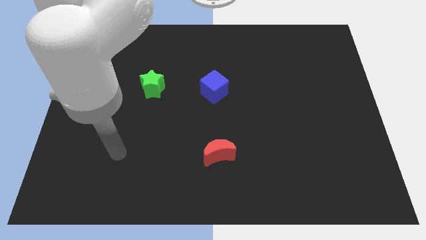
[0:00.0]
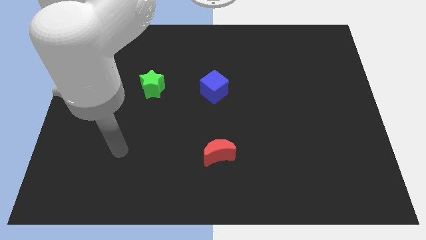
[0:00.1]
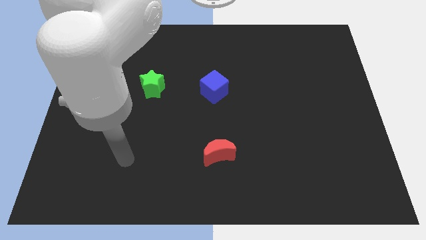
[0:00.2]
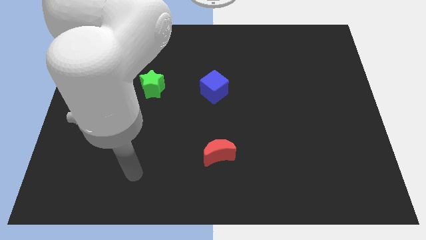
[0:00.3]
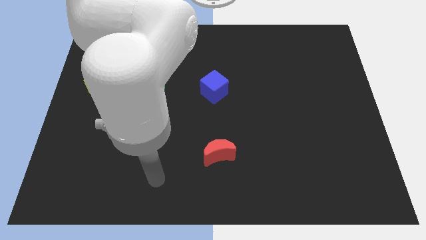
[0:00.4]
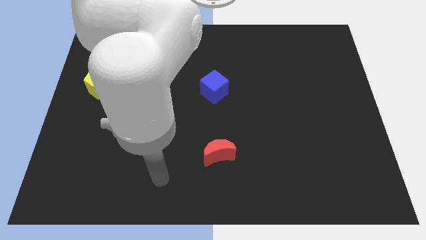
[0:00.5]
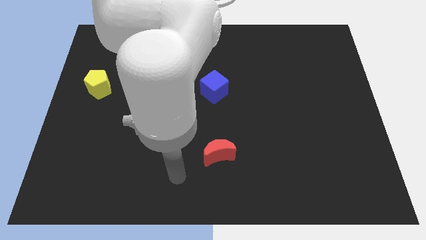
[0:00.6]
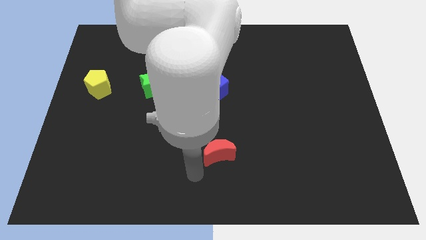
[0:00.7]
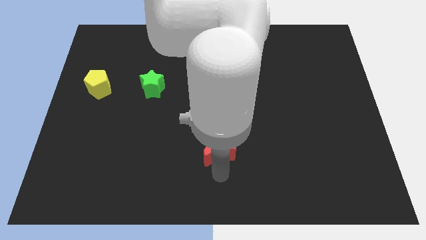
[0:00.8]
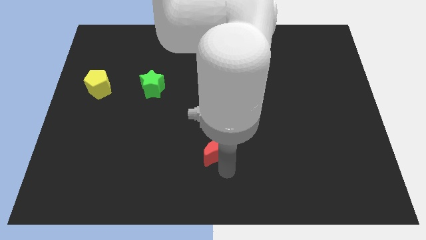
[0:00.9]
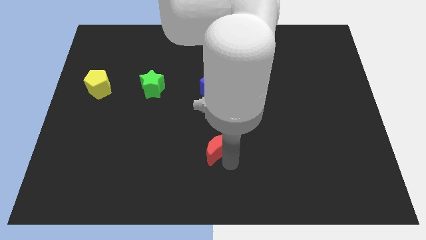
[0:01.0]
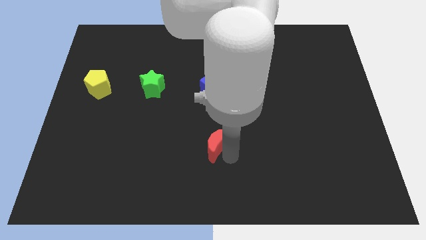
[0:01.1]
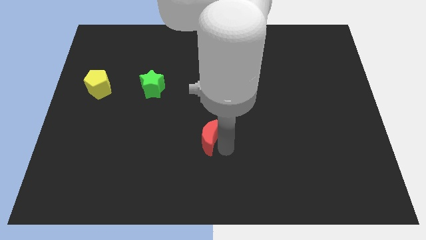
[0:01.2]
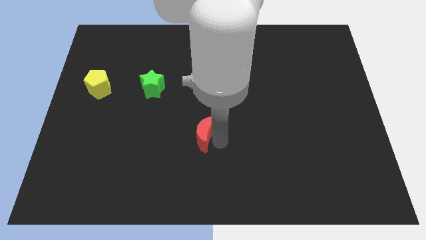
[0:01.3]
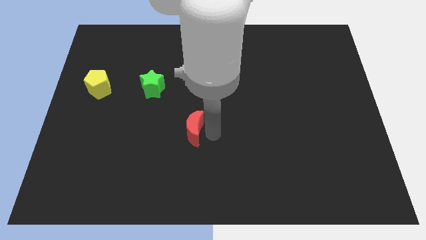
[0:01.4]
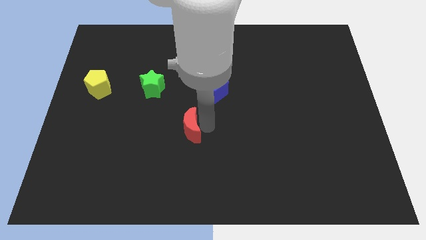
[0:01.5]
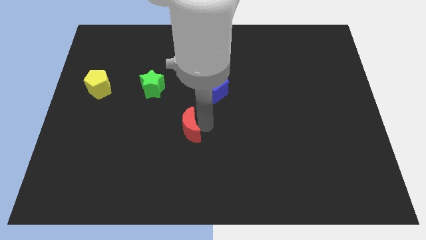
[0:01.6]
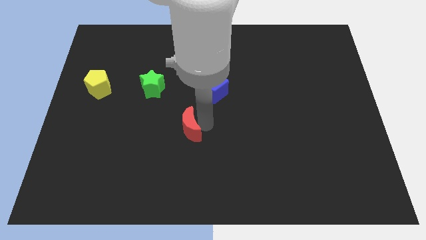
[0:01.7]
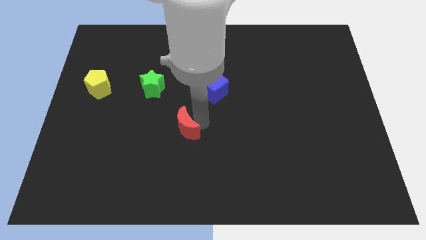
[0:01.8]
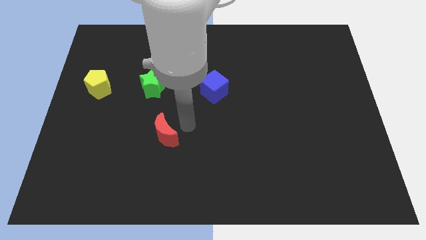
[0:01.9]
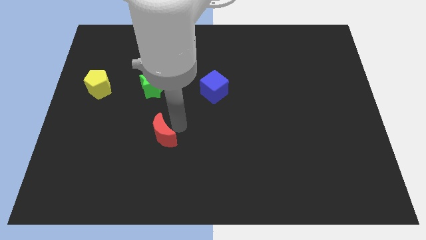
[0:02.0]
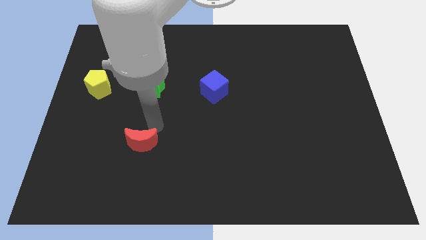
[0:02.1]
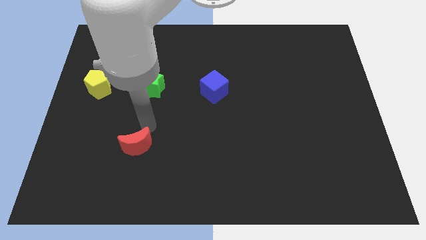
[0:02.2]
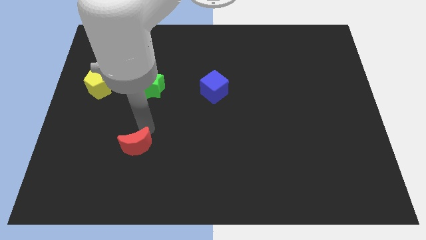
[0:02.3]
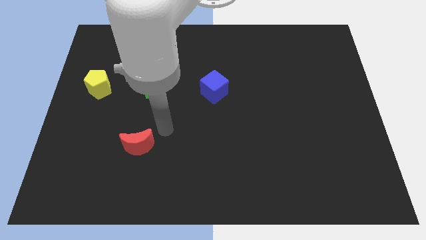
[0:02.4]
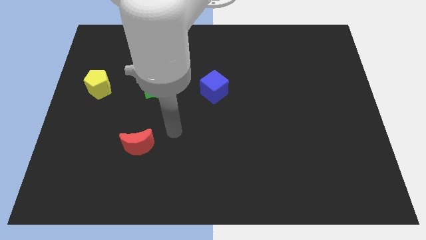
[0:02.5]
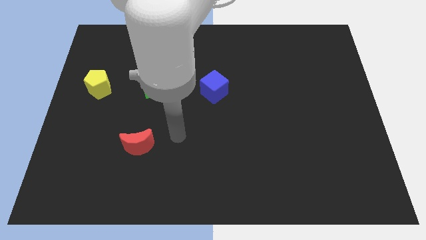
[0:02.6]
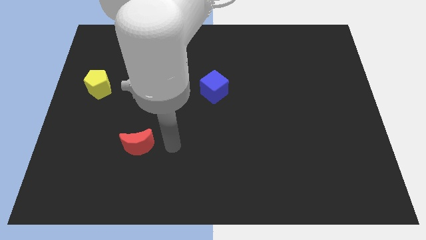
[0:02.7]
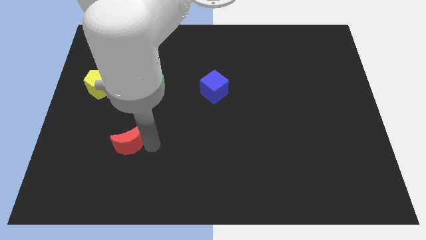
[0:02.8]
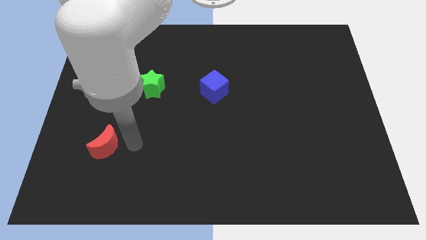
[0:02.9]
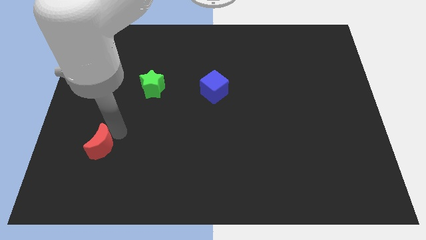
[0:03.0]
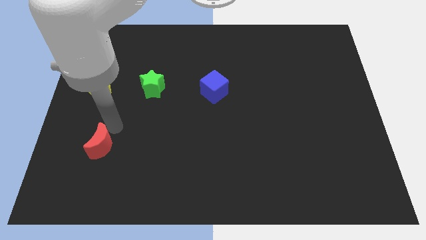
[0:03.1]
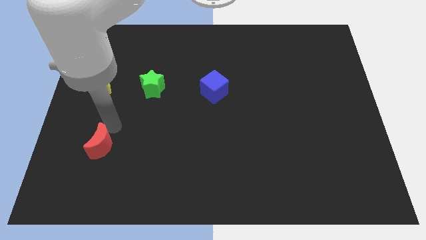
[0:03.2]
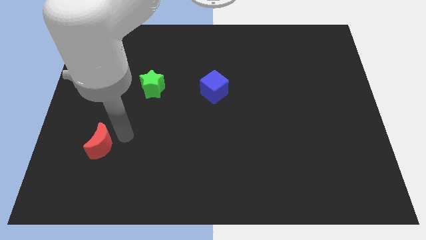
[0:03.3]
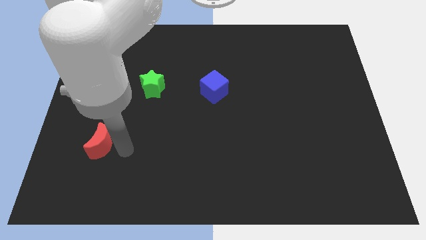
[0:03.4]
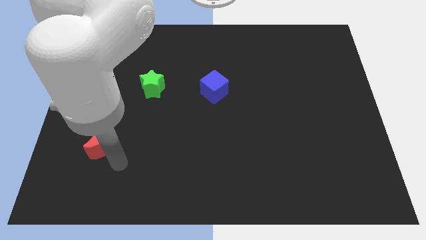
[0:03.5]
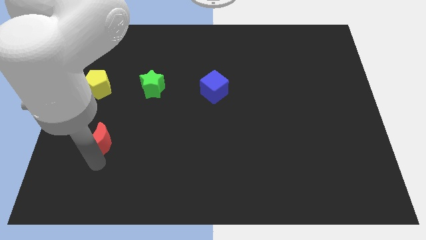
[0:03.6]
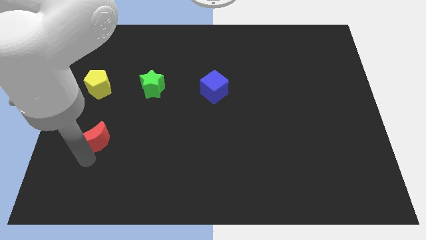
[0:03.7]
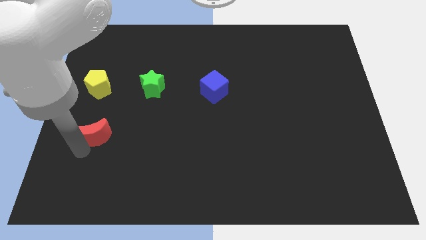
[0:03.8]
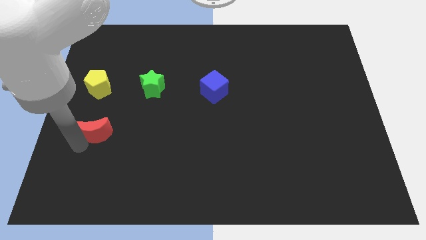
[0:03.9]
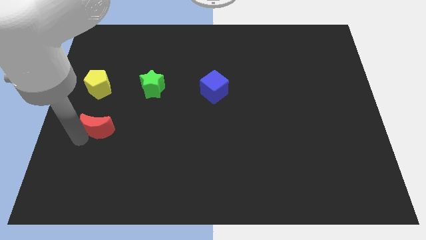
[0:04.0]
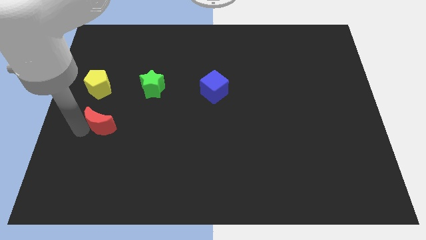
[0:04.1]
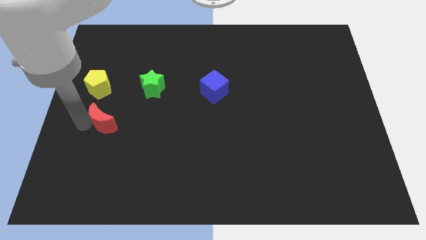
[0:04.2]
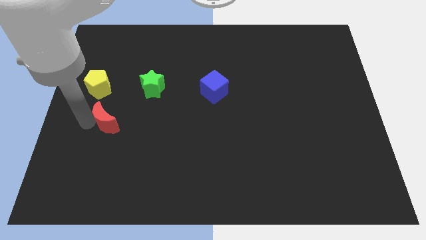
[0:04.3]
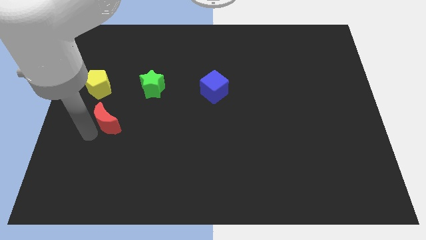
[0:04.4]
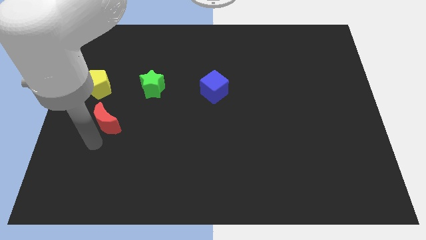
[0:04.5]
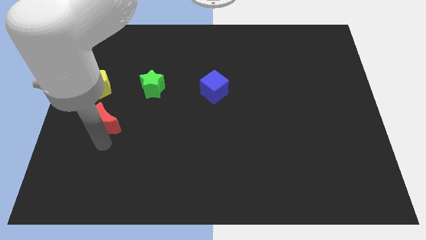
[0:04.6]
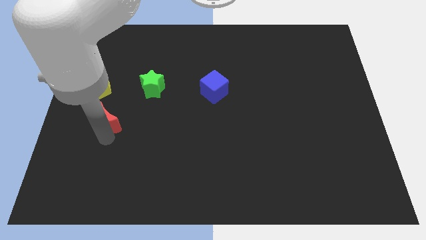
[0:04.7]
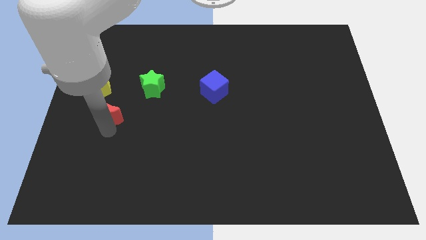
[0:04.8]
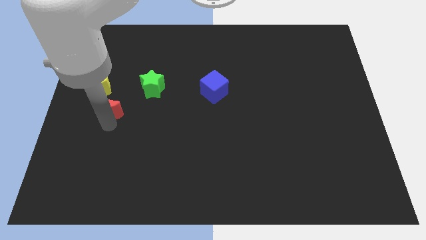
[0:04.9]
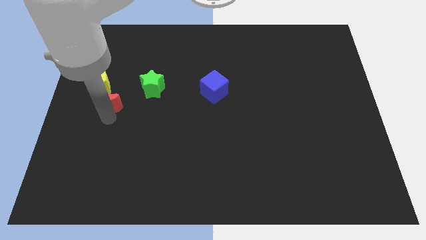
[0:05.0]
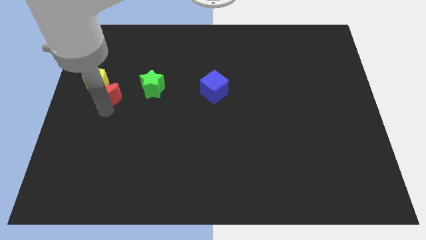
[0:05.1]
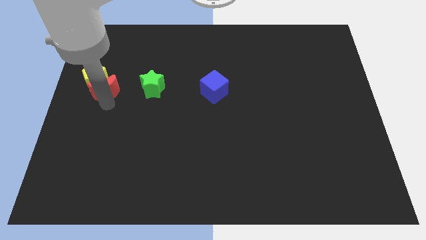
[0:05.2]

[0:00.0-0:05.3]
move the red moon close to the pentagon

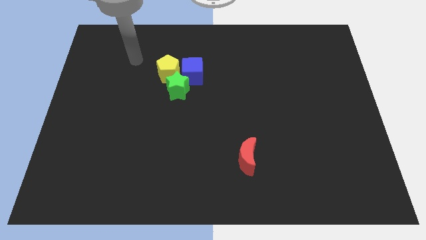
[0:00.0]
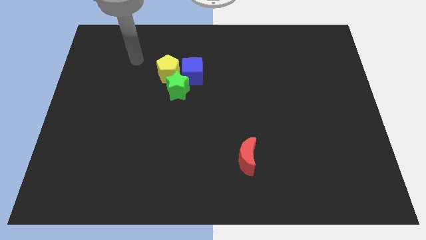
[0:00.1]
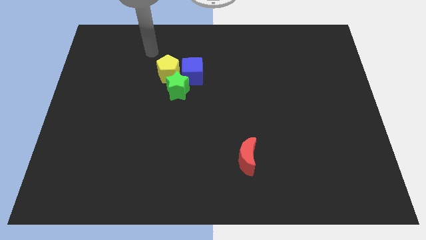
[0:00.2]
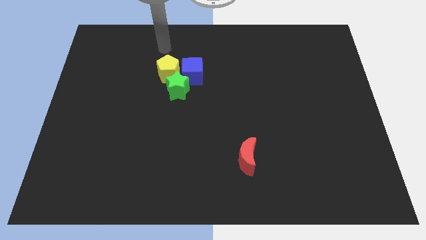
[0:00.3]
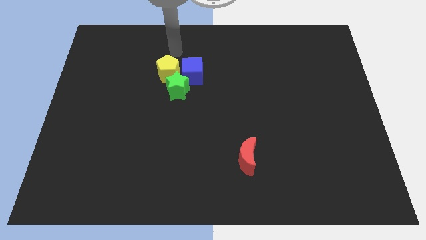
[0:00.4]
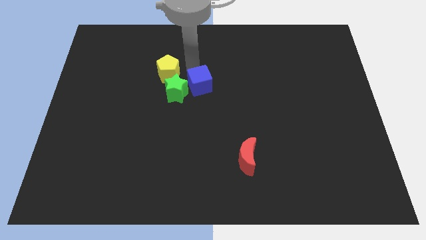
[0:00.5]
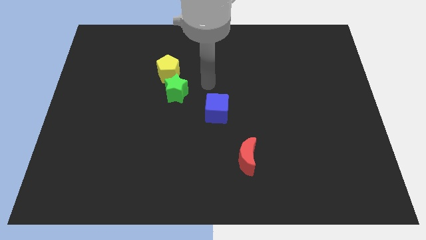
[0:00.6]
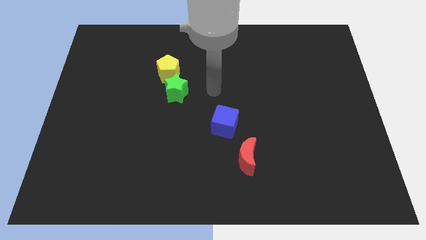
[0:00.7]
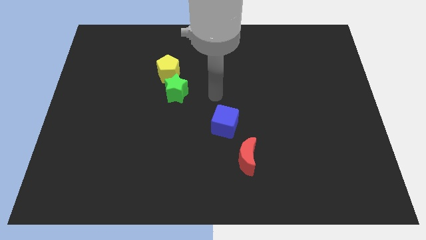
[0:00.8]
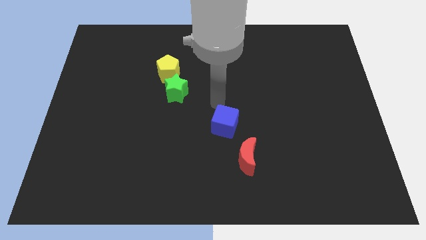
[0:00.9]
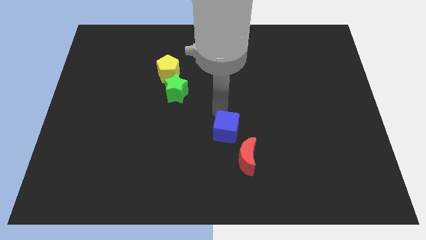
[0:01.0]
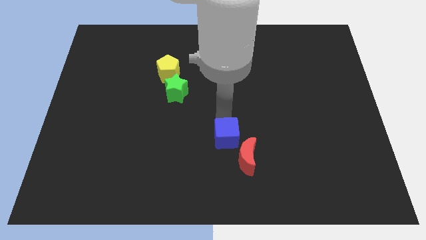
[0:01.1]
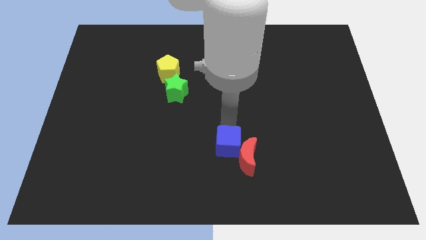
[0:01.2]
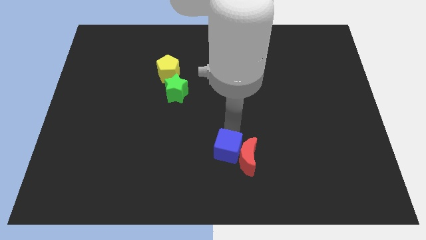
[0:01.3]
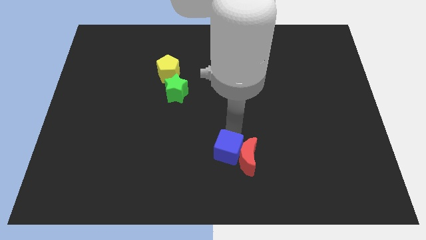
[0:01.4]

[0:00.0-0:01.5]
slide the cube next to the red block

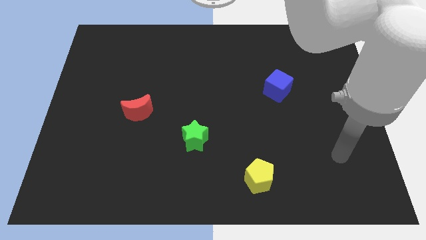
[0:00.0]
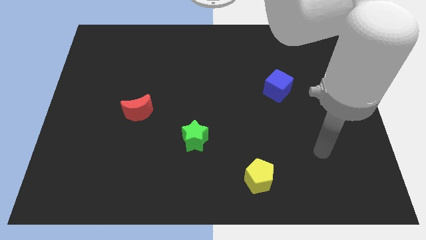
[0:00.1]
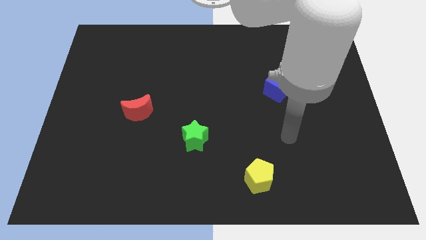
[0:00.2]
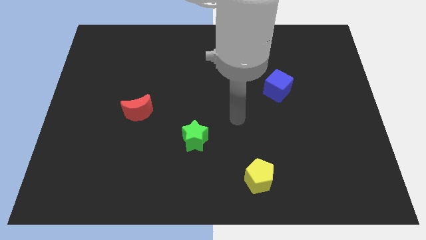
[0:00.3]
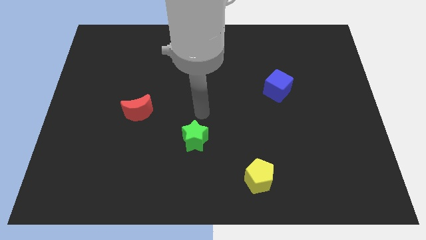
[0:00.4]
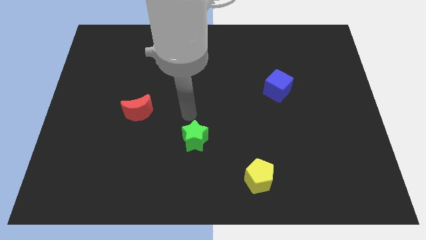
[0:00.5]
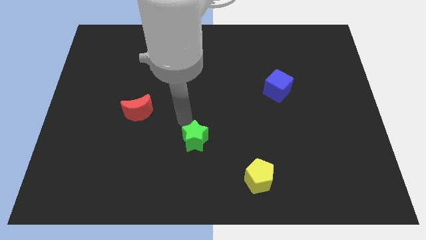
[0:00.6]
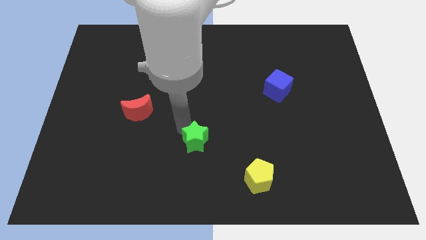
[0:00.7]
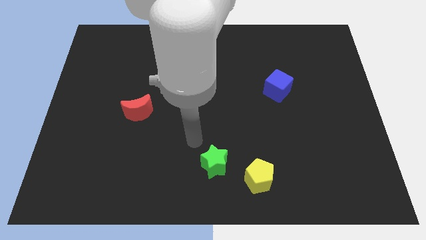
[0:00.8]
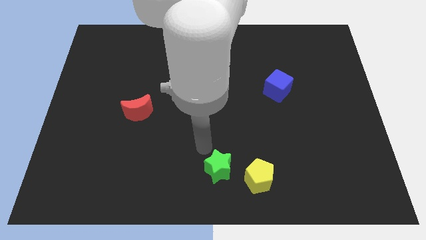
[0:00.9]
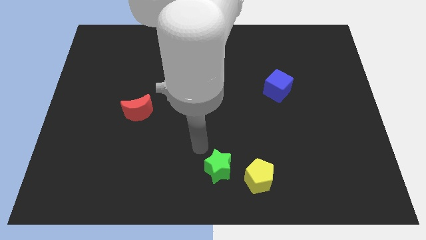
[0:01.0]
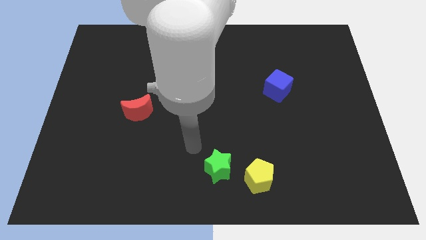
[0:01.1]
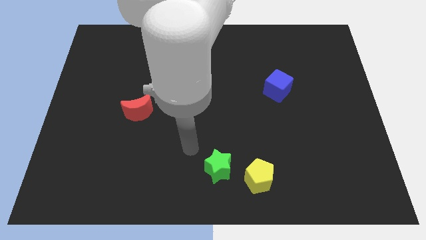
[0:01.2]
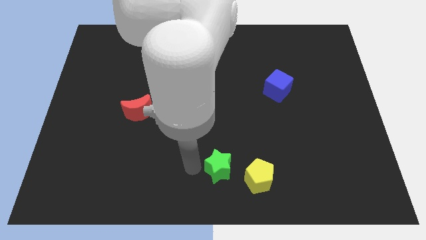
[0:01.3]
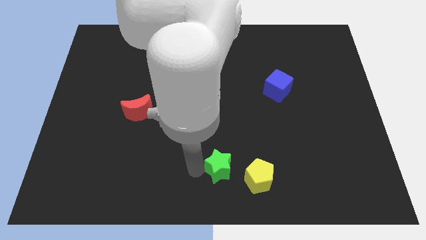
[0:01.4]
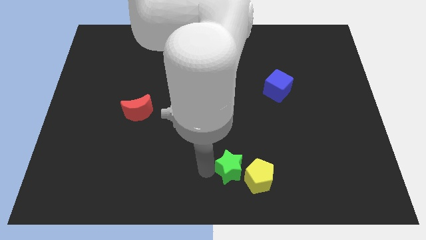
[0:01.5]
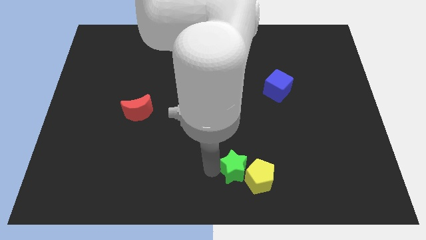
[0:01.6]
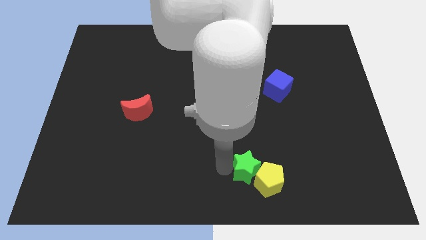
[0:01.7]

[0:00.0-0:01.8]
move the green star next to the yellow block
